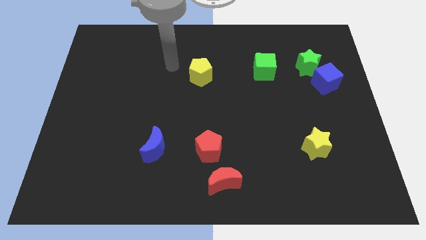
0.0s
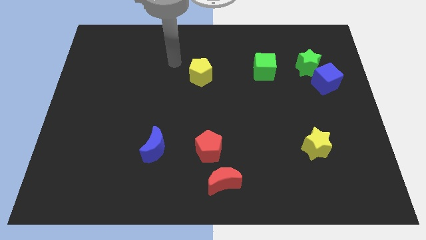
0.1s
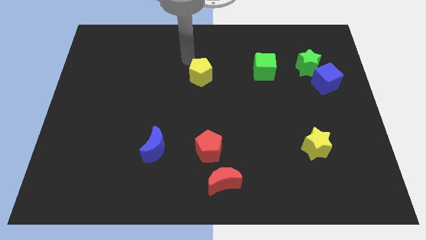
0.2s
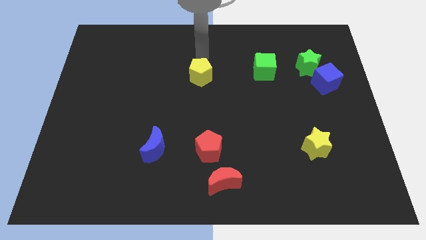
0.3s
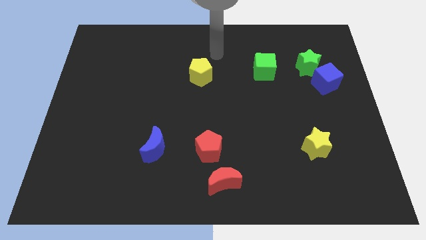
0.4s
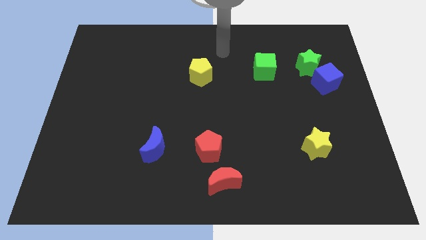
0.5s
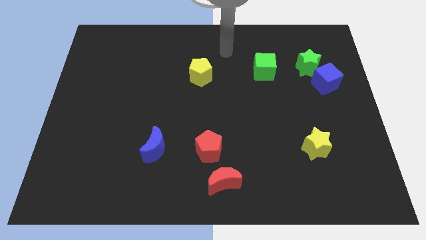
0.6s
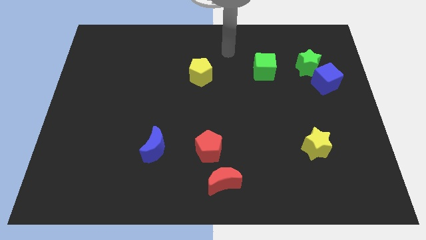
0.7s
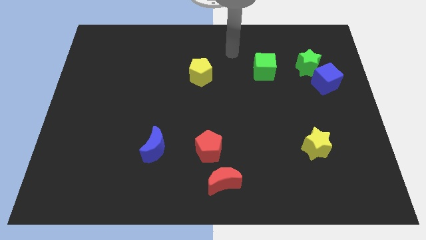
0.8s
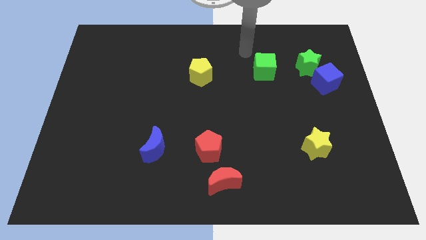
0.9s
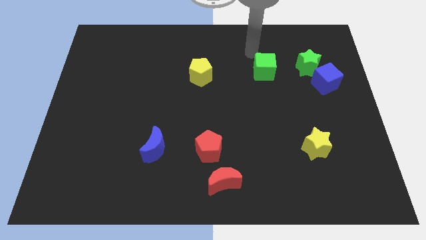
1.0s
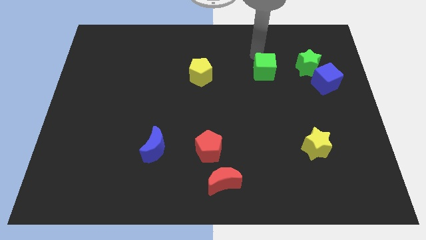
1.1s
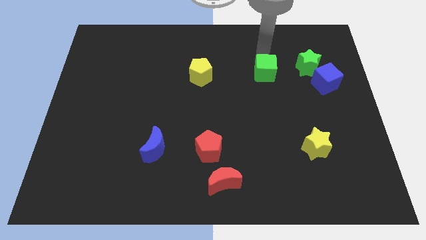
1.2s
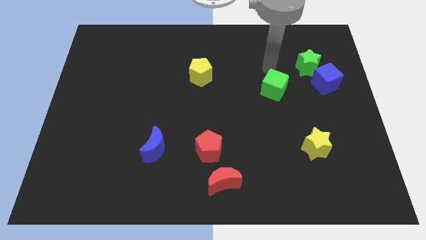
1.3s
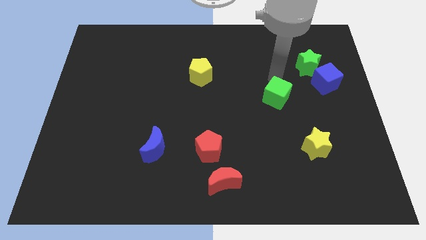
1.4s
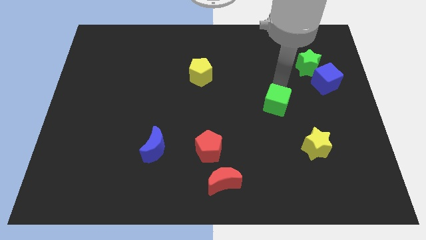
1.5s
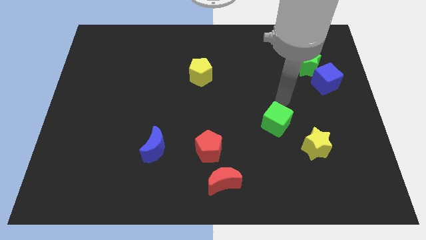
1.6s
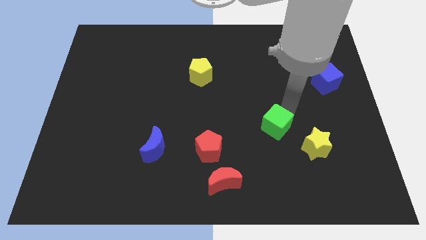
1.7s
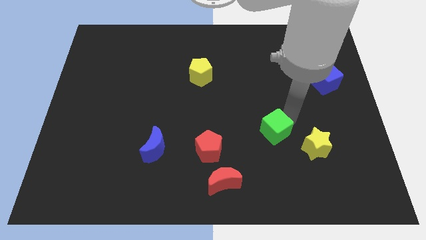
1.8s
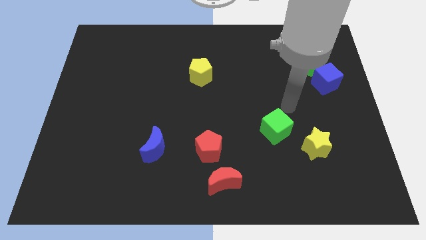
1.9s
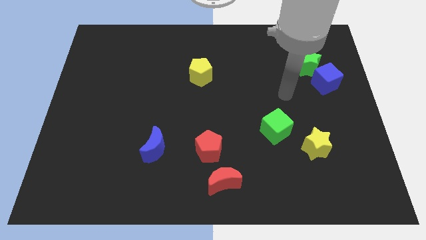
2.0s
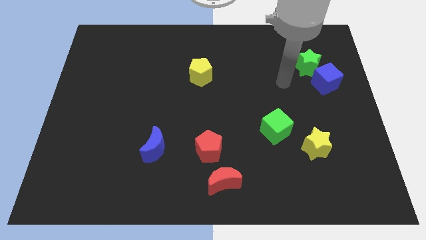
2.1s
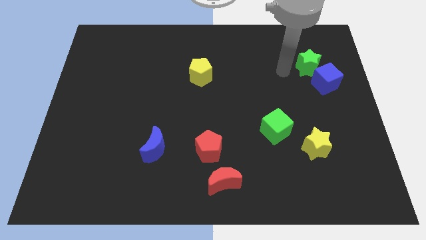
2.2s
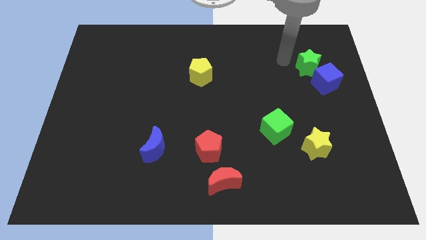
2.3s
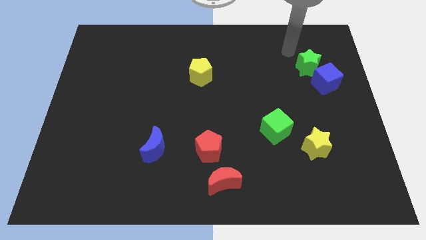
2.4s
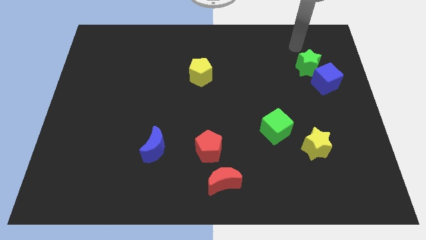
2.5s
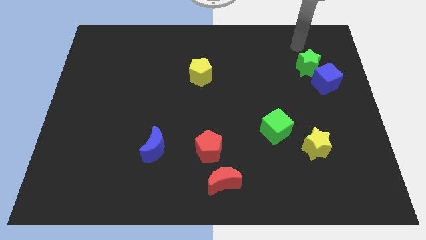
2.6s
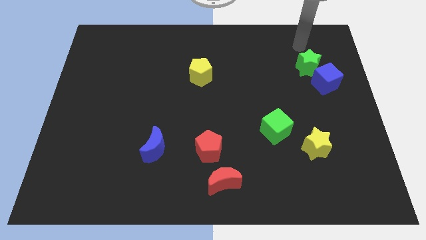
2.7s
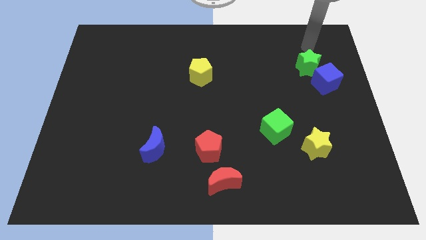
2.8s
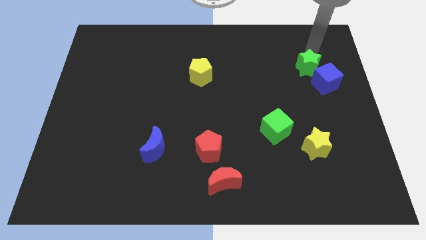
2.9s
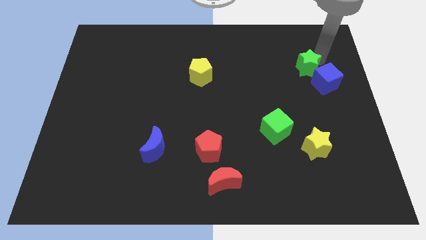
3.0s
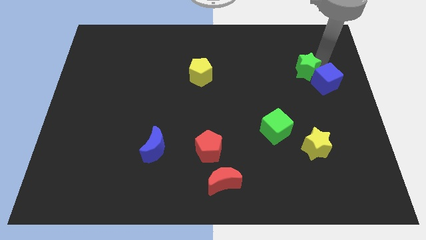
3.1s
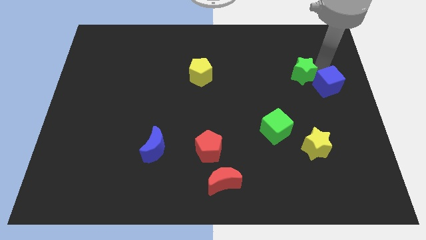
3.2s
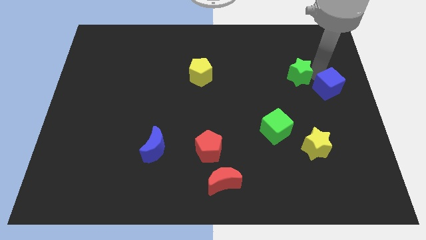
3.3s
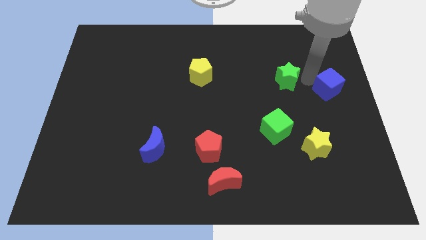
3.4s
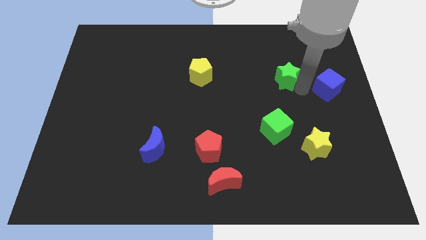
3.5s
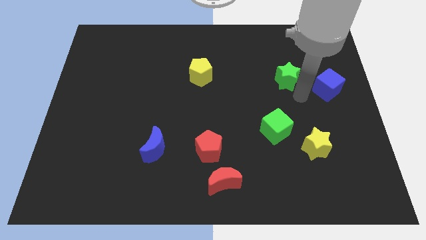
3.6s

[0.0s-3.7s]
put the green cube vertically below the green star

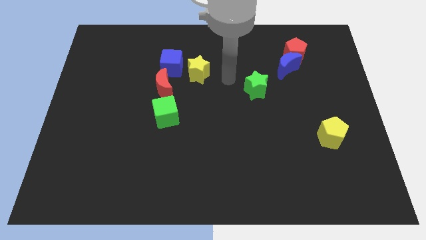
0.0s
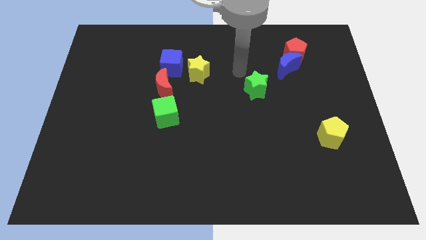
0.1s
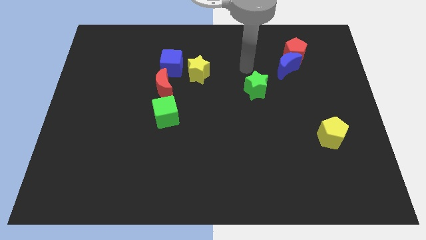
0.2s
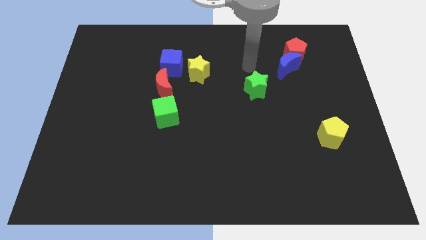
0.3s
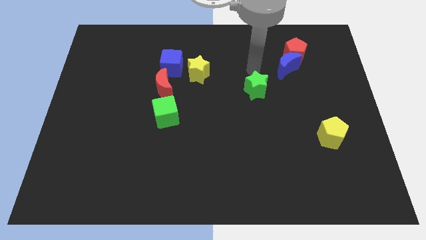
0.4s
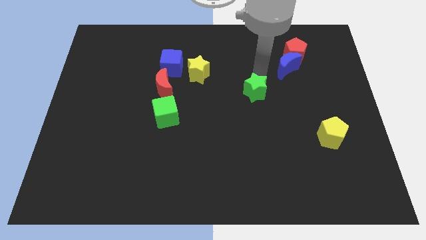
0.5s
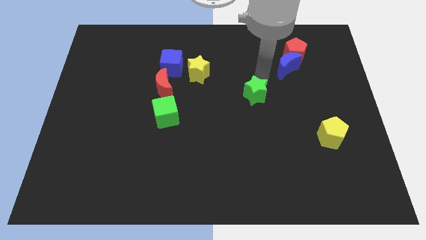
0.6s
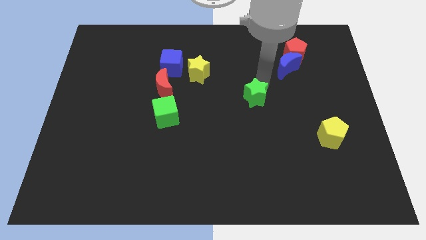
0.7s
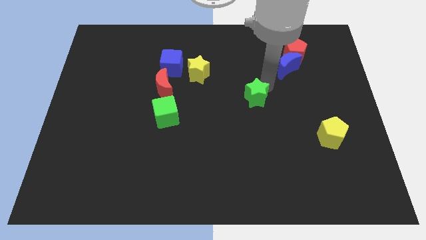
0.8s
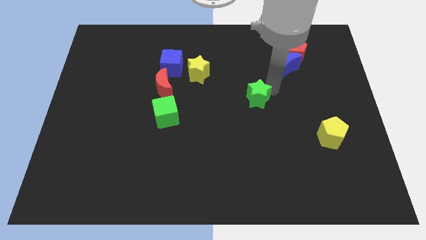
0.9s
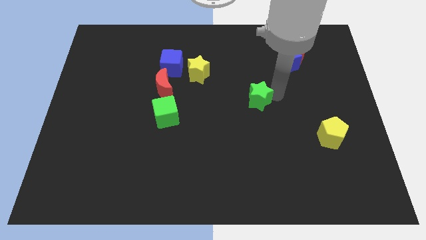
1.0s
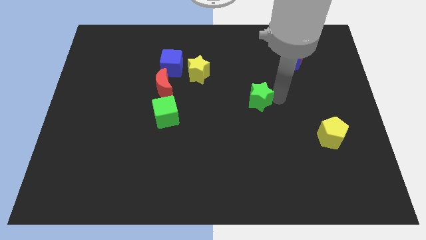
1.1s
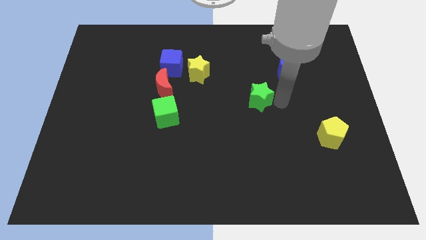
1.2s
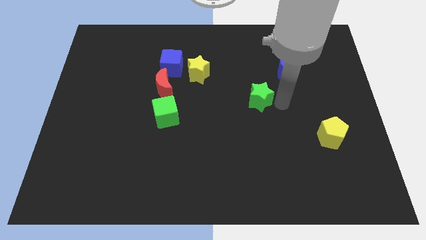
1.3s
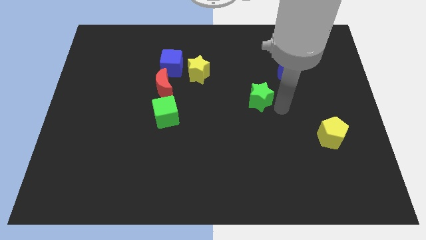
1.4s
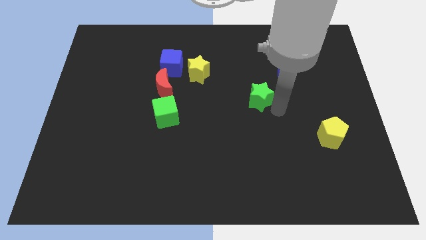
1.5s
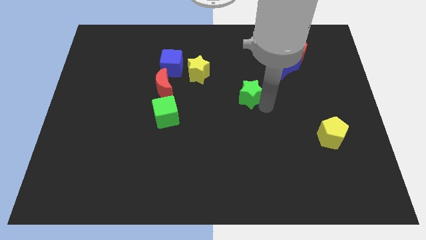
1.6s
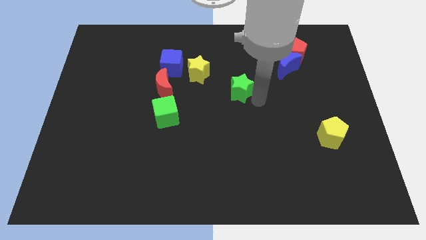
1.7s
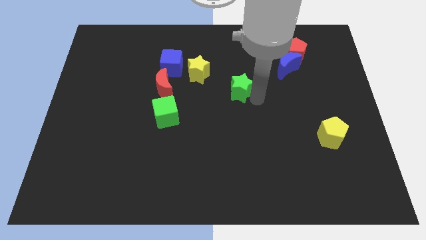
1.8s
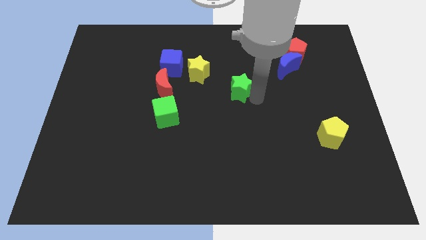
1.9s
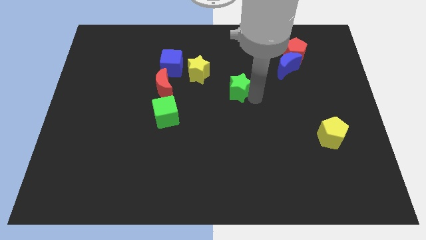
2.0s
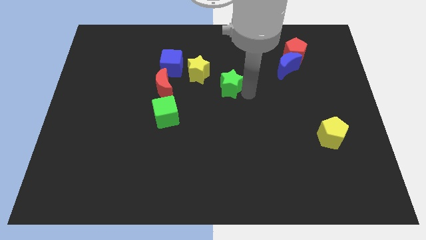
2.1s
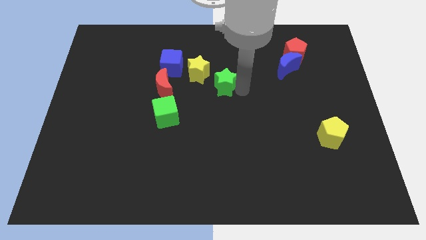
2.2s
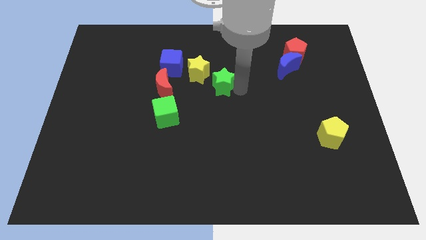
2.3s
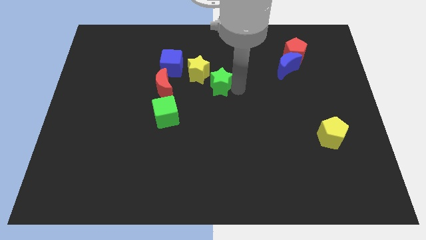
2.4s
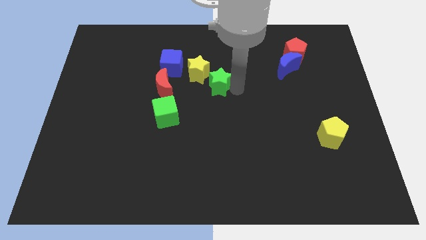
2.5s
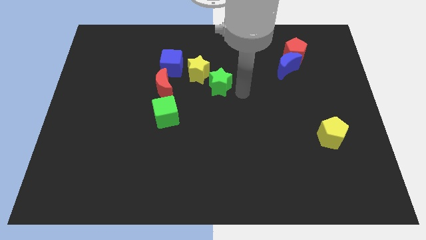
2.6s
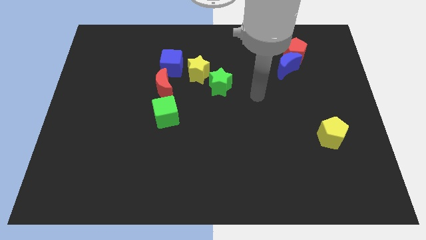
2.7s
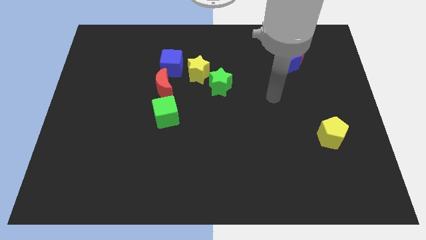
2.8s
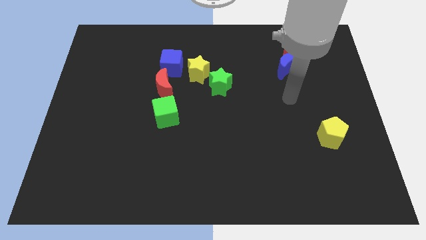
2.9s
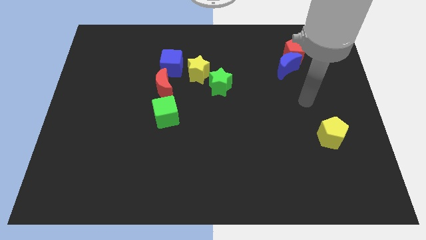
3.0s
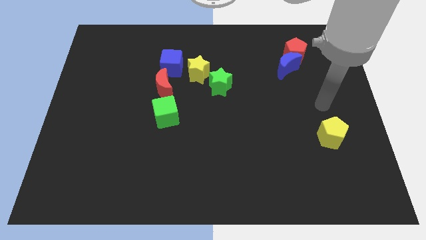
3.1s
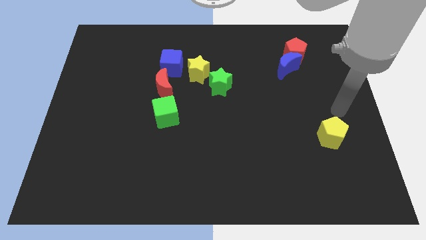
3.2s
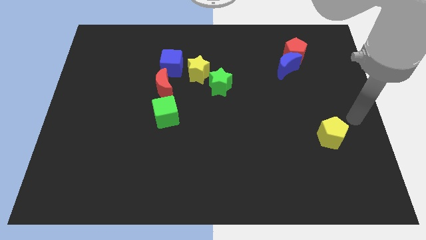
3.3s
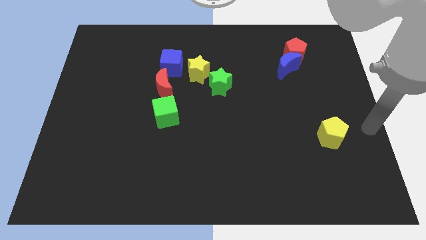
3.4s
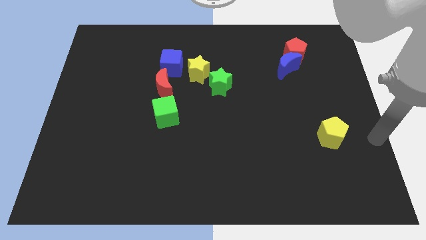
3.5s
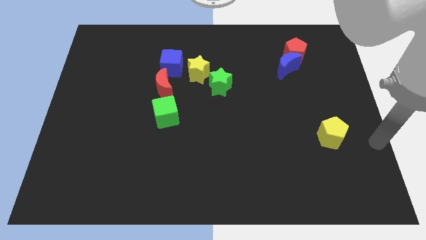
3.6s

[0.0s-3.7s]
move the green star to the group of blocks

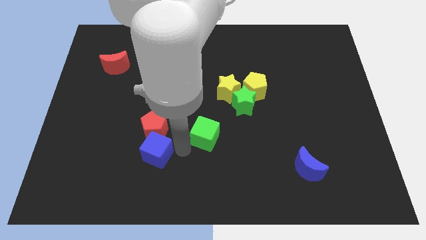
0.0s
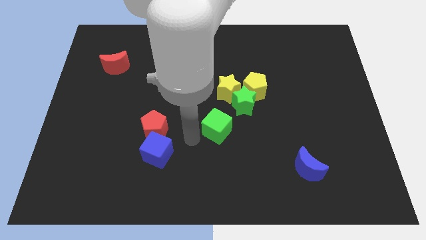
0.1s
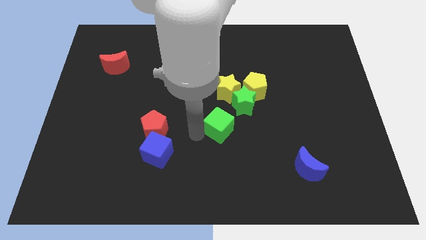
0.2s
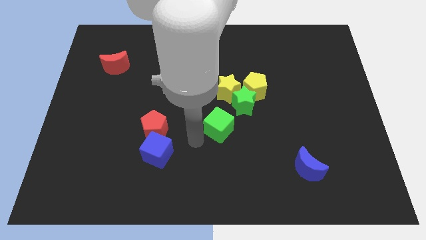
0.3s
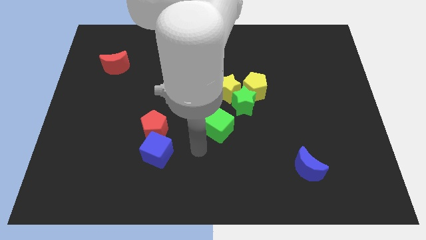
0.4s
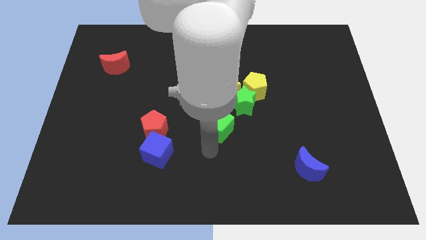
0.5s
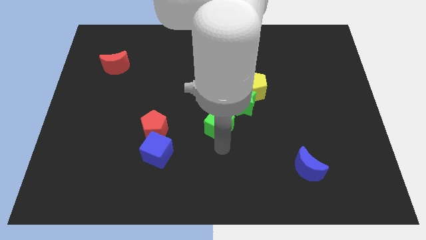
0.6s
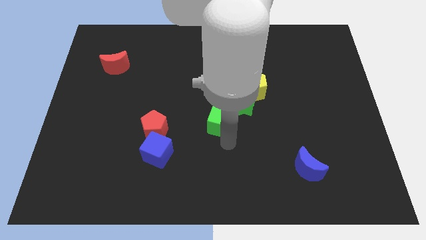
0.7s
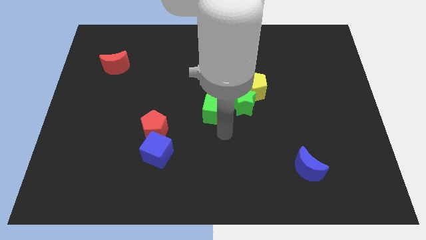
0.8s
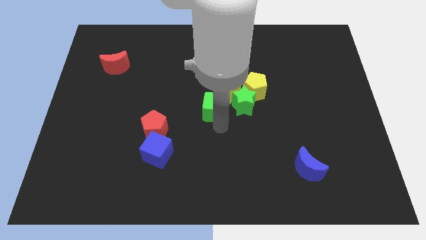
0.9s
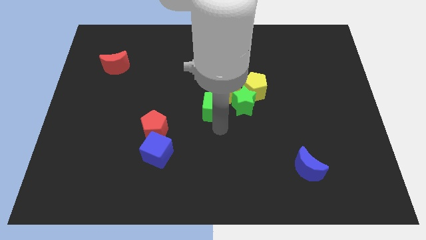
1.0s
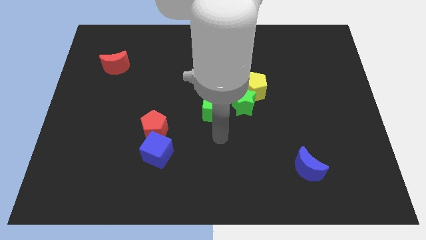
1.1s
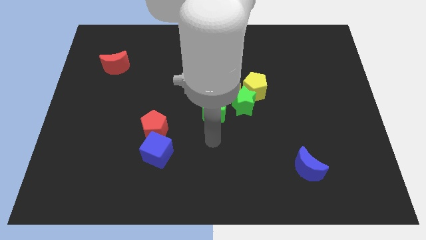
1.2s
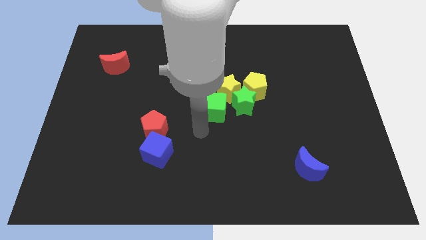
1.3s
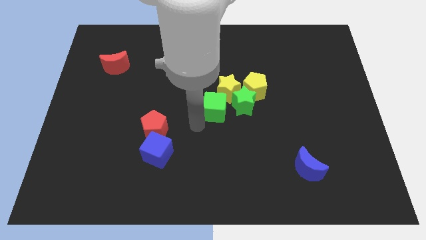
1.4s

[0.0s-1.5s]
move green cube below yellow star
